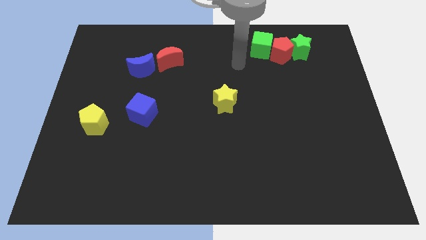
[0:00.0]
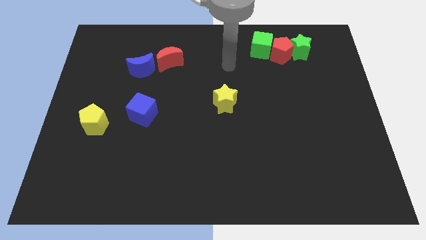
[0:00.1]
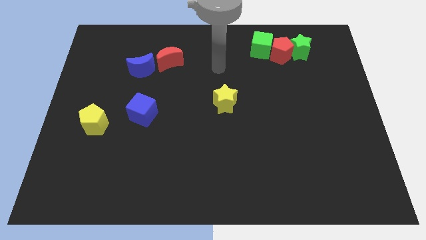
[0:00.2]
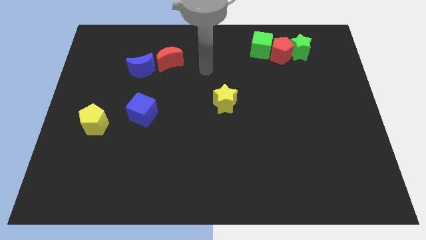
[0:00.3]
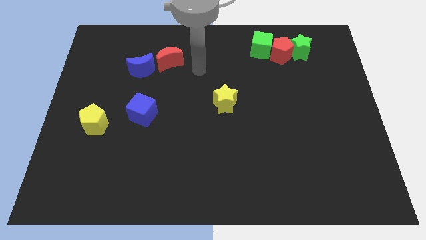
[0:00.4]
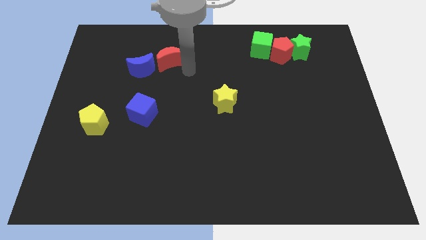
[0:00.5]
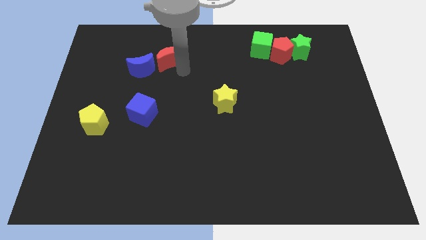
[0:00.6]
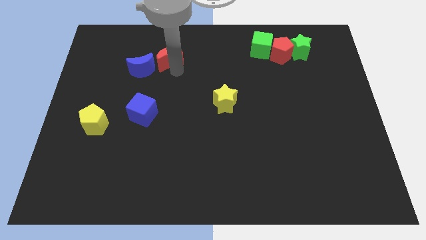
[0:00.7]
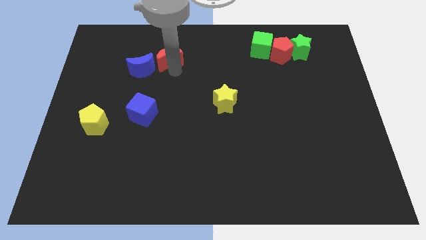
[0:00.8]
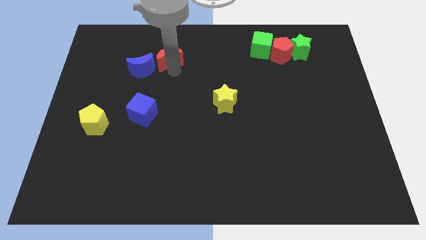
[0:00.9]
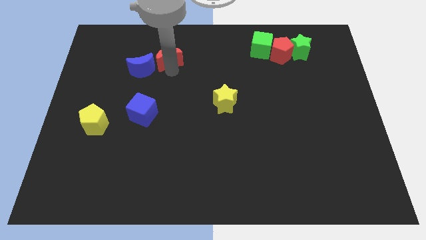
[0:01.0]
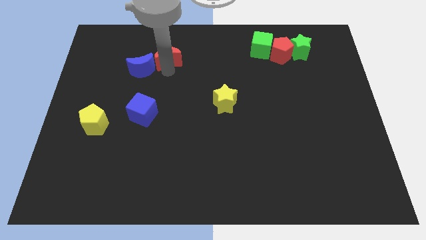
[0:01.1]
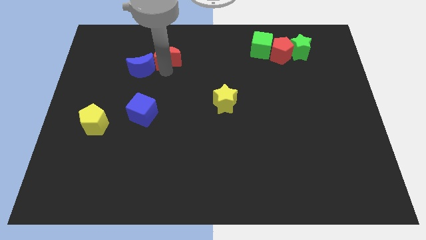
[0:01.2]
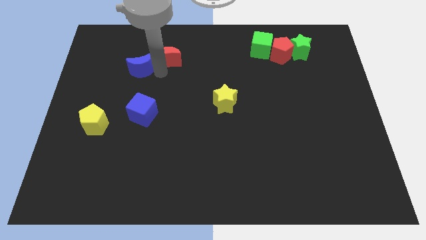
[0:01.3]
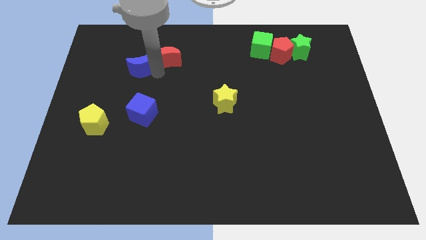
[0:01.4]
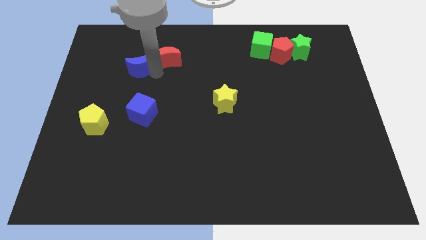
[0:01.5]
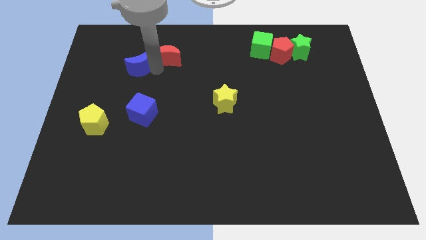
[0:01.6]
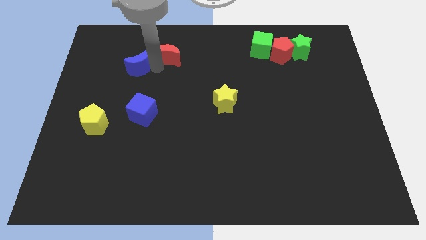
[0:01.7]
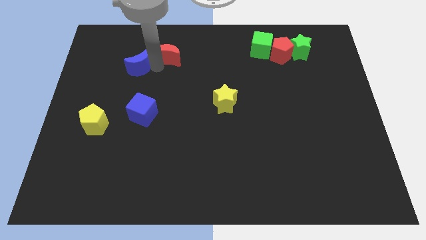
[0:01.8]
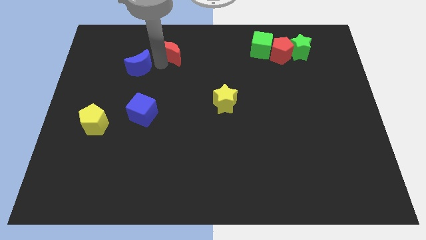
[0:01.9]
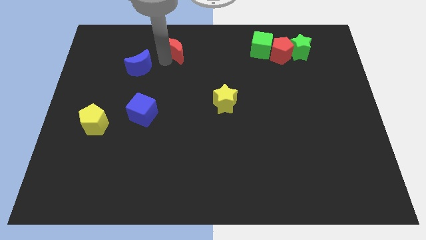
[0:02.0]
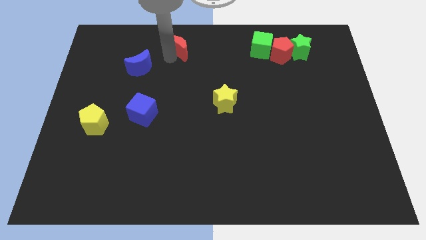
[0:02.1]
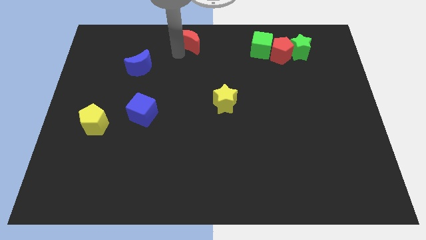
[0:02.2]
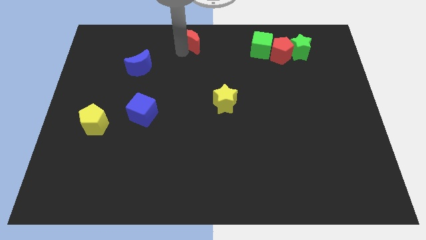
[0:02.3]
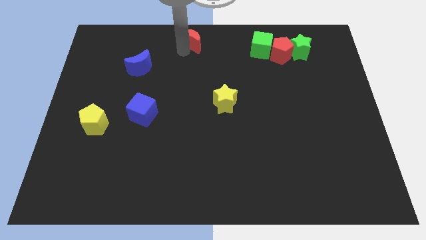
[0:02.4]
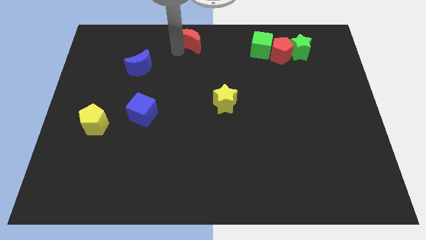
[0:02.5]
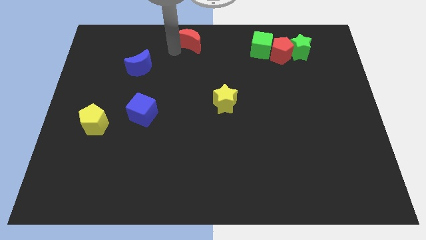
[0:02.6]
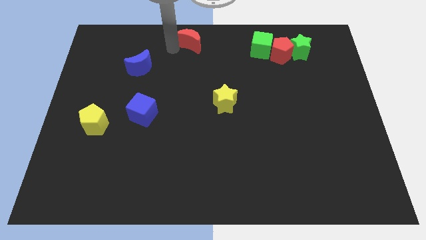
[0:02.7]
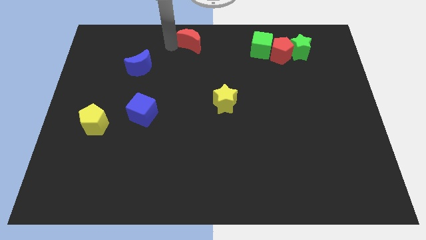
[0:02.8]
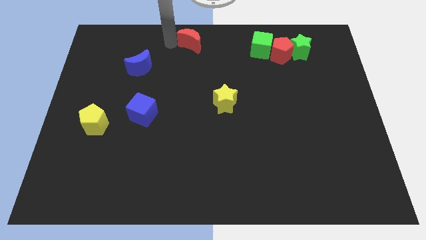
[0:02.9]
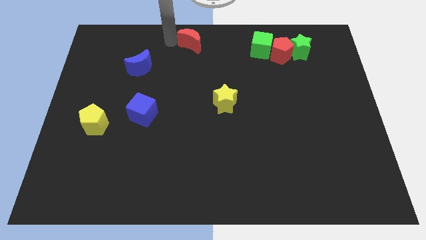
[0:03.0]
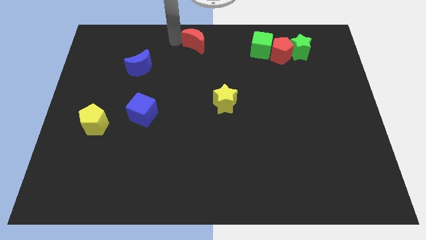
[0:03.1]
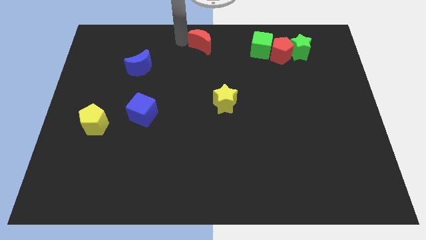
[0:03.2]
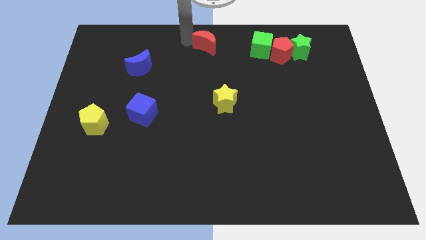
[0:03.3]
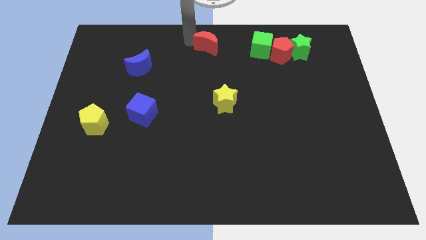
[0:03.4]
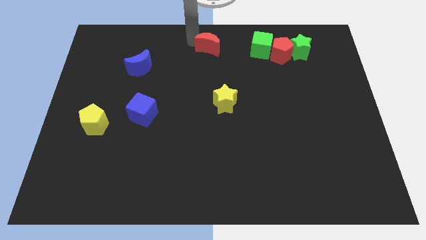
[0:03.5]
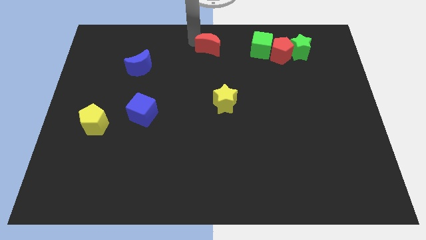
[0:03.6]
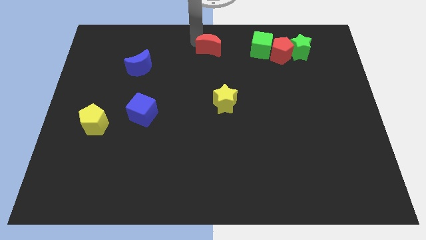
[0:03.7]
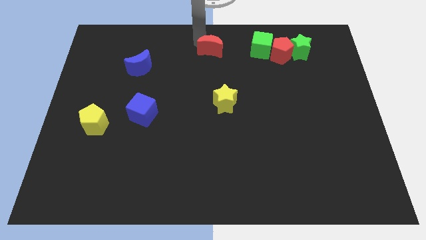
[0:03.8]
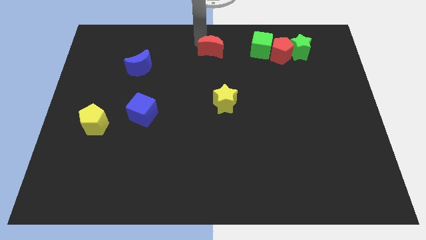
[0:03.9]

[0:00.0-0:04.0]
separate blue moon and red moon

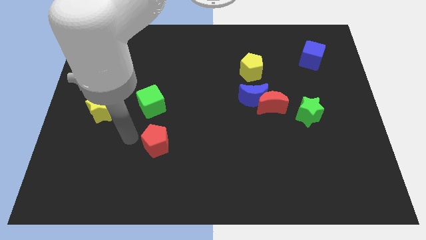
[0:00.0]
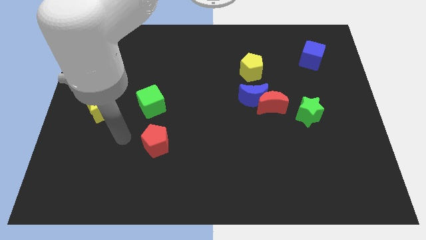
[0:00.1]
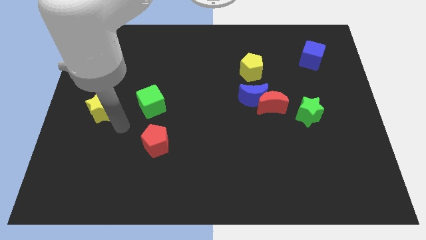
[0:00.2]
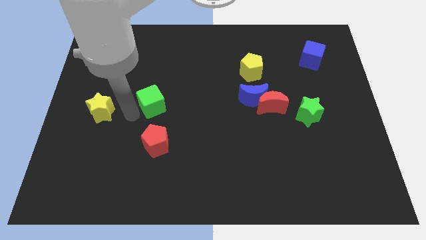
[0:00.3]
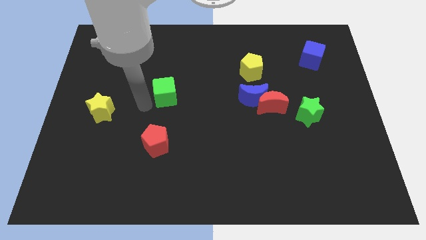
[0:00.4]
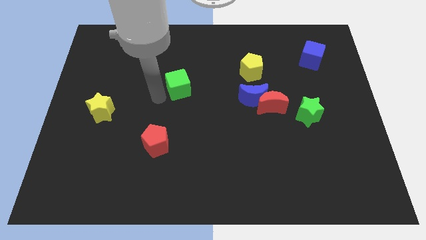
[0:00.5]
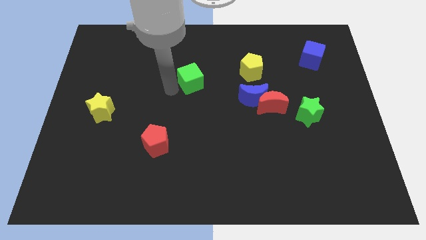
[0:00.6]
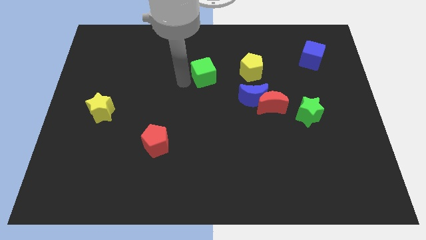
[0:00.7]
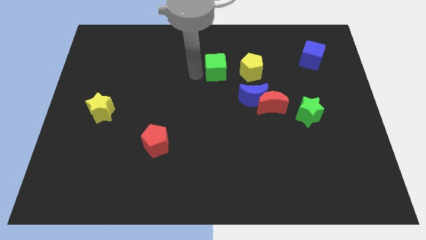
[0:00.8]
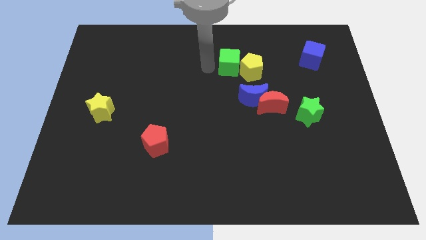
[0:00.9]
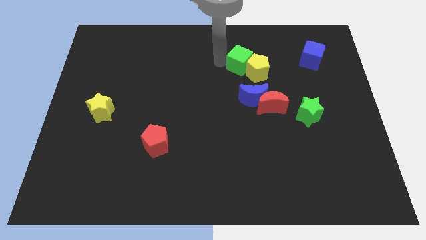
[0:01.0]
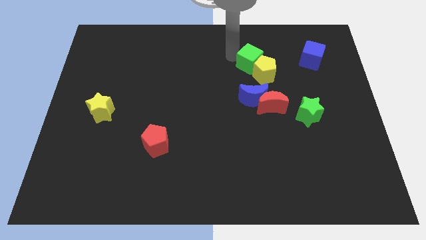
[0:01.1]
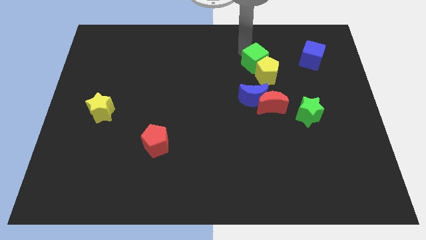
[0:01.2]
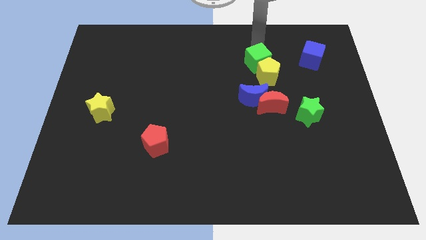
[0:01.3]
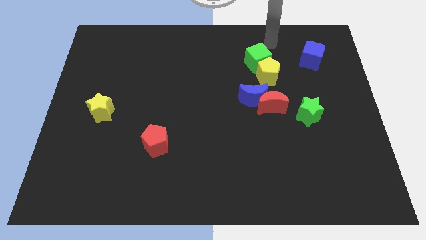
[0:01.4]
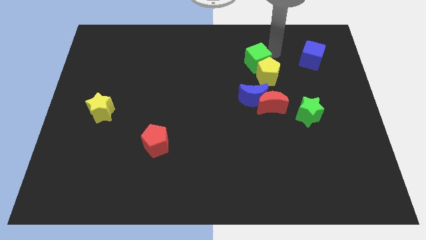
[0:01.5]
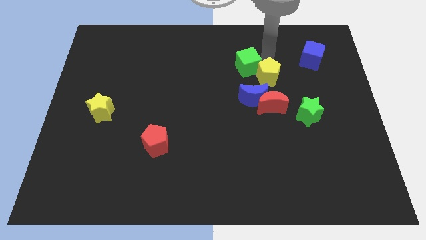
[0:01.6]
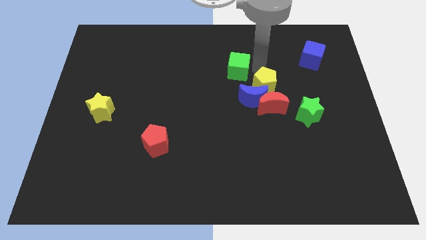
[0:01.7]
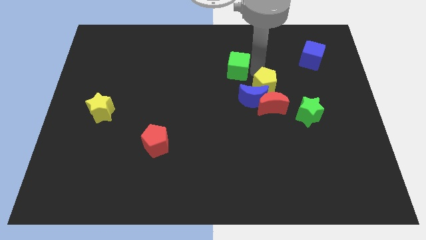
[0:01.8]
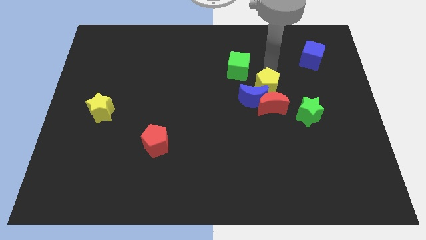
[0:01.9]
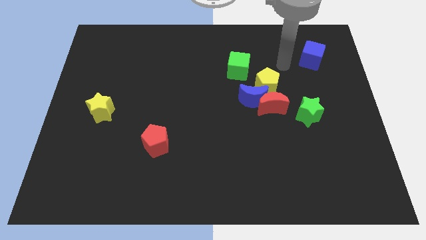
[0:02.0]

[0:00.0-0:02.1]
move green cube into yellow pentagon

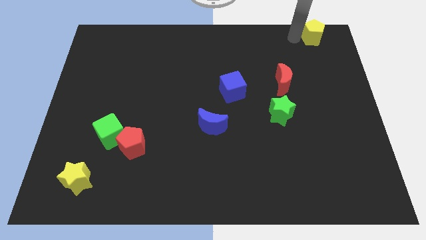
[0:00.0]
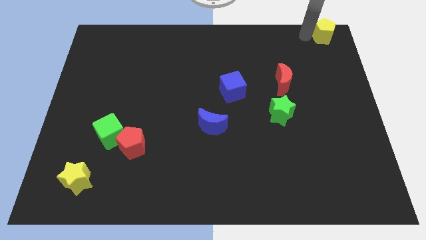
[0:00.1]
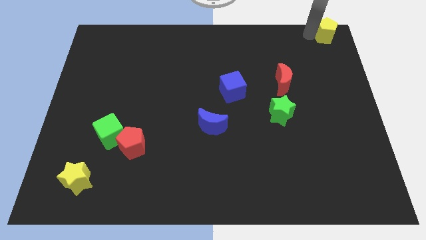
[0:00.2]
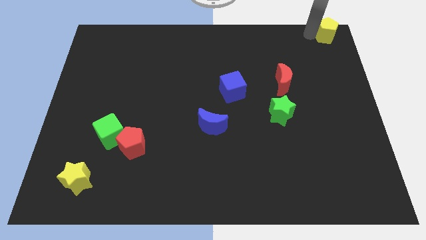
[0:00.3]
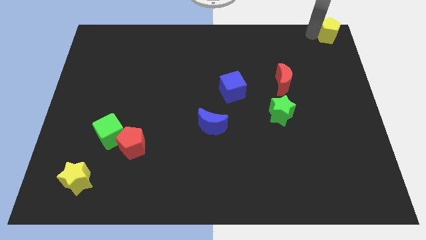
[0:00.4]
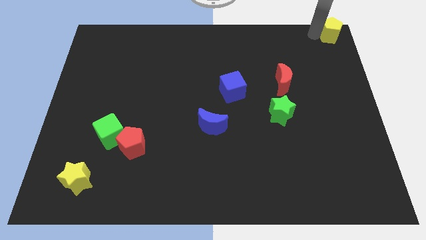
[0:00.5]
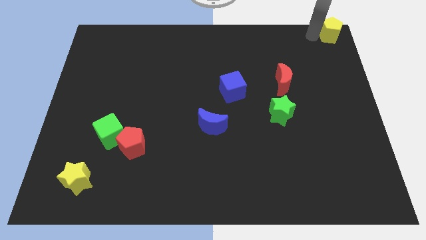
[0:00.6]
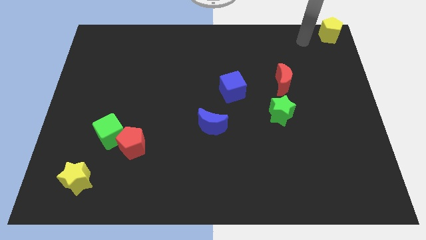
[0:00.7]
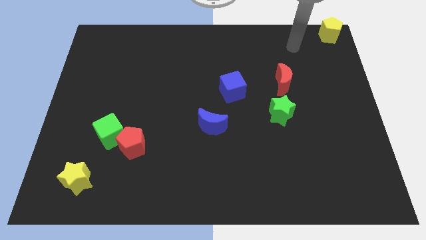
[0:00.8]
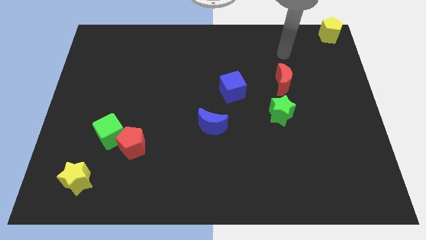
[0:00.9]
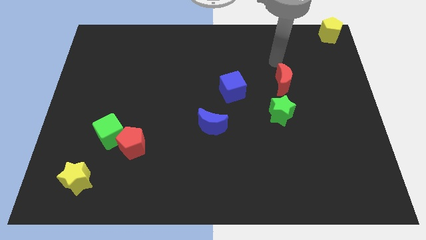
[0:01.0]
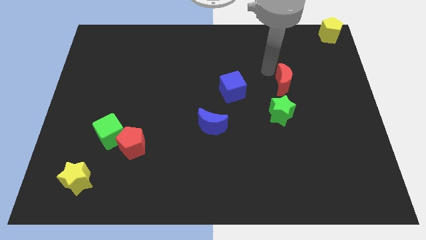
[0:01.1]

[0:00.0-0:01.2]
move the yellow pentagon at the top right corner

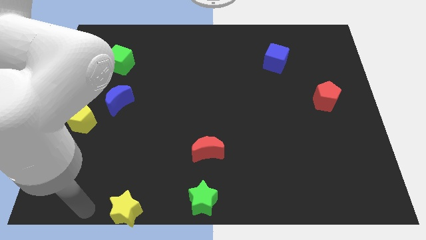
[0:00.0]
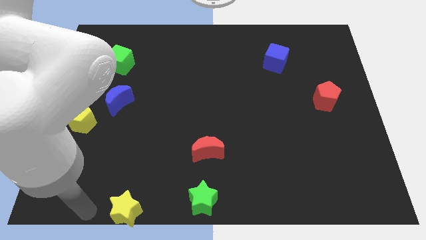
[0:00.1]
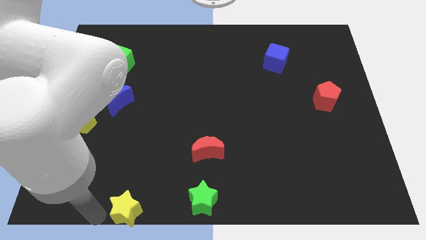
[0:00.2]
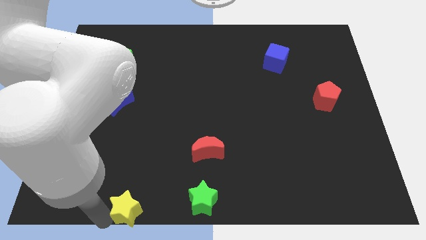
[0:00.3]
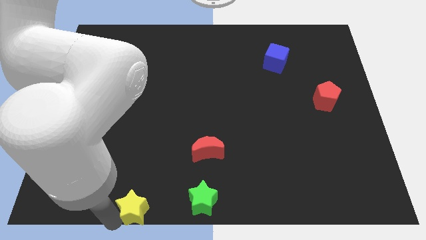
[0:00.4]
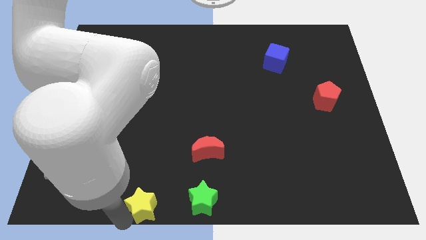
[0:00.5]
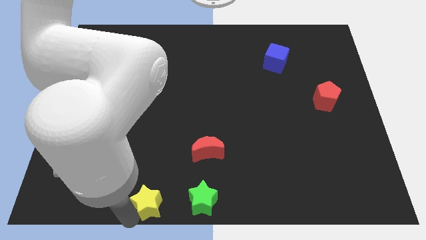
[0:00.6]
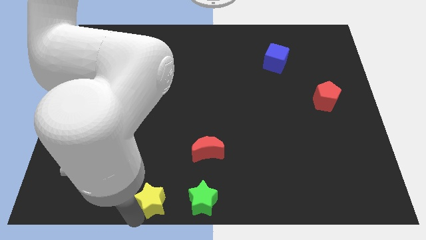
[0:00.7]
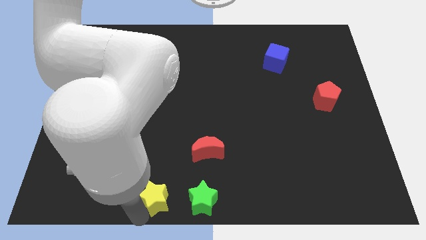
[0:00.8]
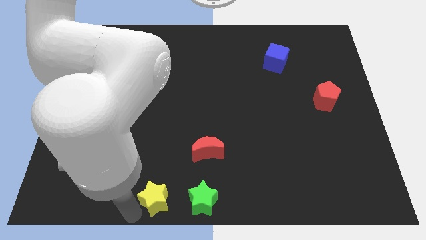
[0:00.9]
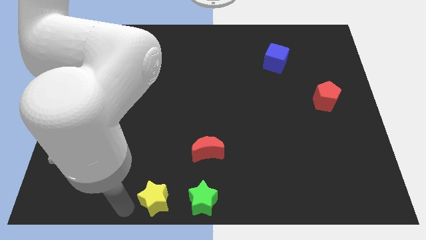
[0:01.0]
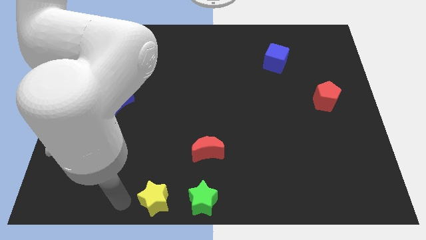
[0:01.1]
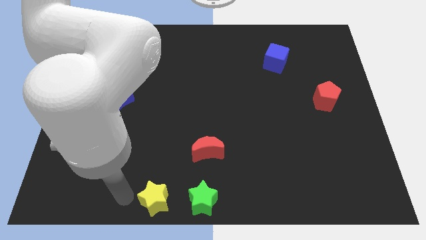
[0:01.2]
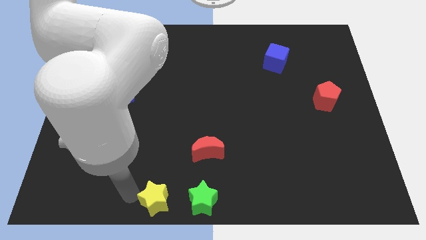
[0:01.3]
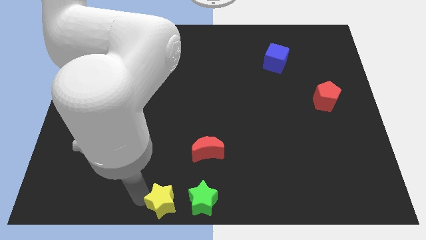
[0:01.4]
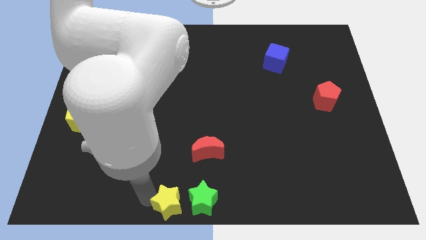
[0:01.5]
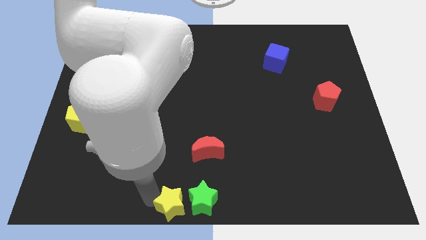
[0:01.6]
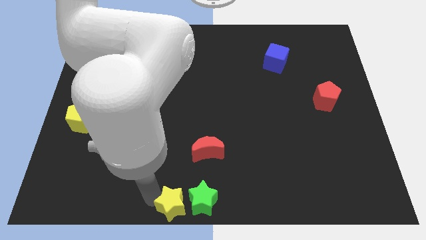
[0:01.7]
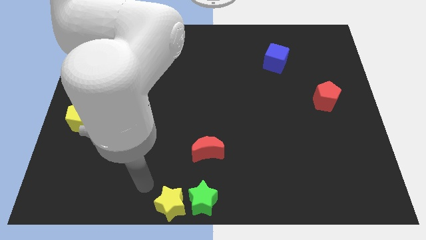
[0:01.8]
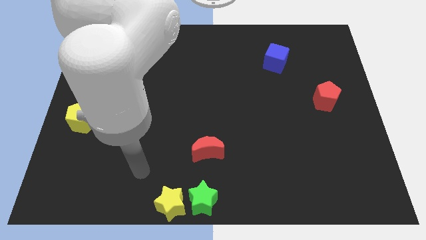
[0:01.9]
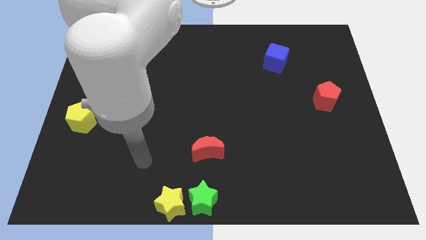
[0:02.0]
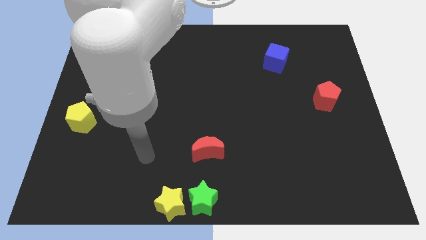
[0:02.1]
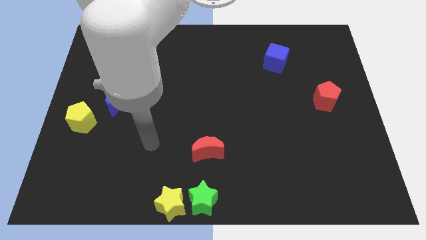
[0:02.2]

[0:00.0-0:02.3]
push the yellow star close to the green star
